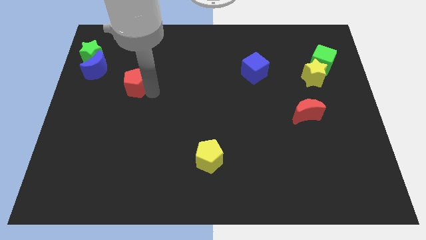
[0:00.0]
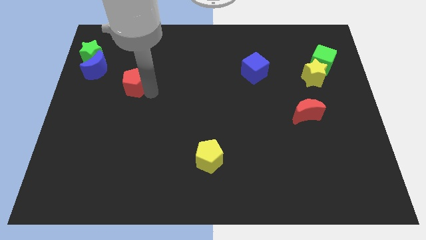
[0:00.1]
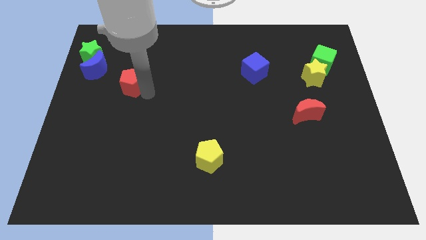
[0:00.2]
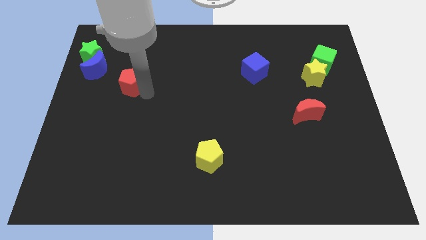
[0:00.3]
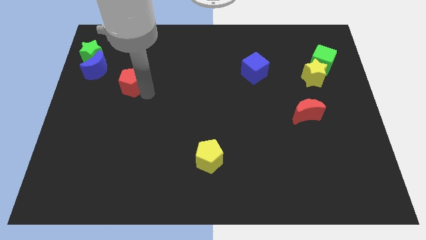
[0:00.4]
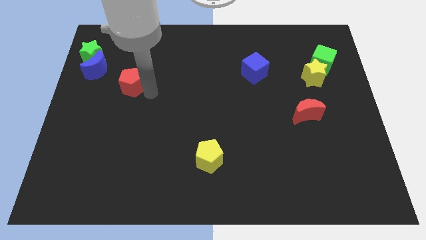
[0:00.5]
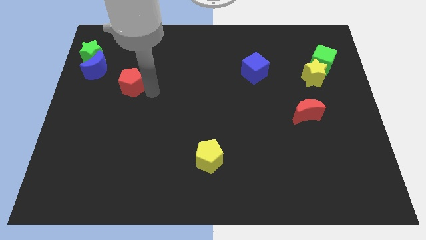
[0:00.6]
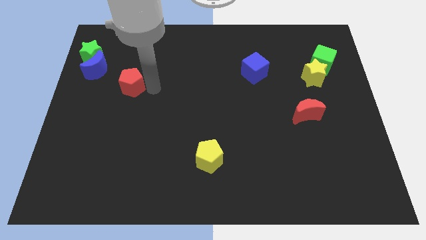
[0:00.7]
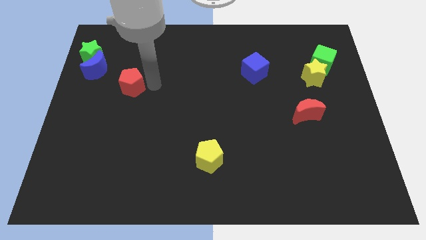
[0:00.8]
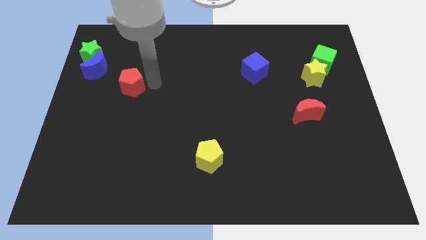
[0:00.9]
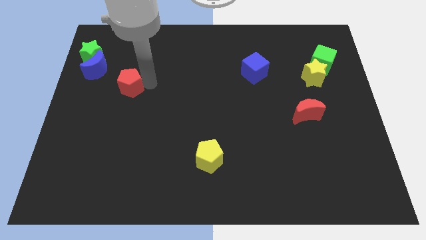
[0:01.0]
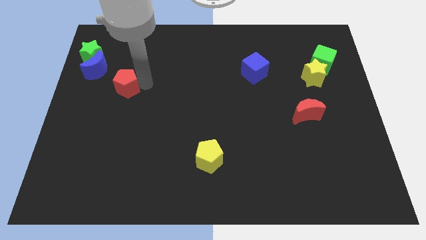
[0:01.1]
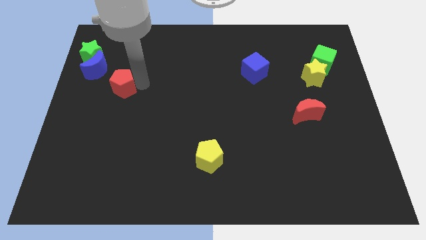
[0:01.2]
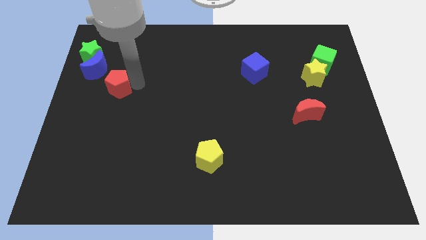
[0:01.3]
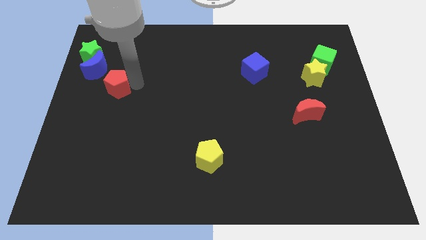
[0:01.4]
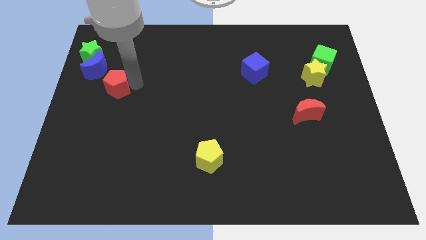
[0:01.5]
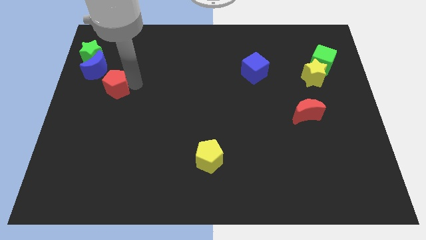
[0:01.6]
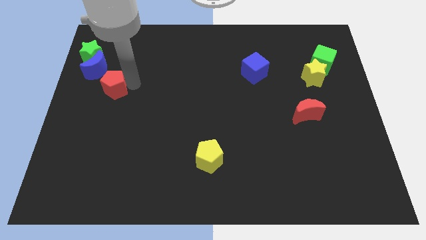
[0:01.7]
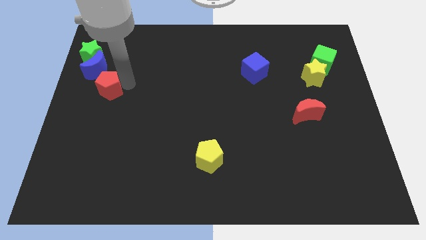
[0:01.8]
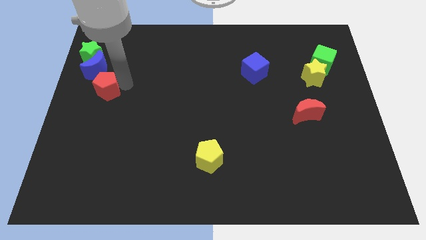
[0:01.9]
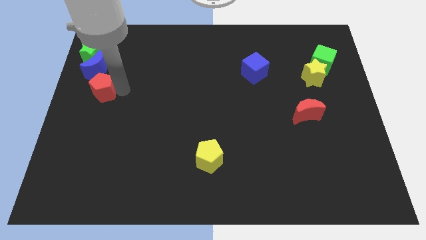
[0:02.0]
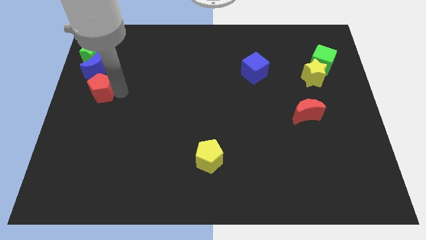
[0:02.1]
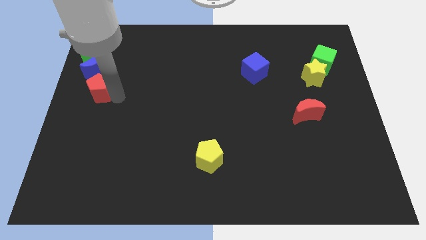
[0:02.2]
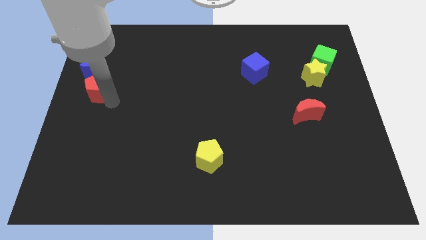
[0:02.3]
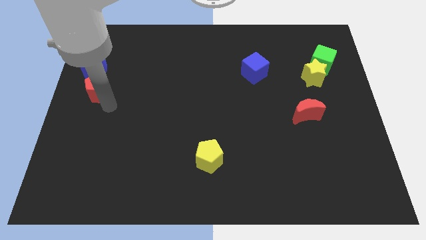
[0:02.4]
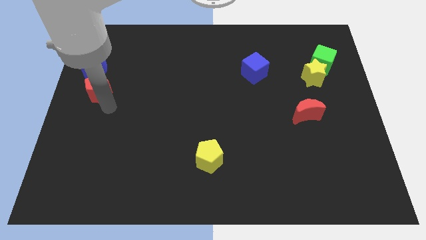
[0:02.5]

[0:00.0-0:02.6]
place the red pentagon below the blue crescent

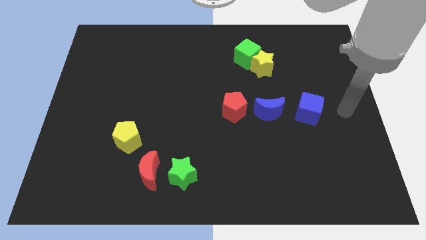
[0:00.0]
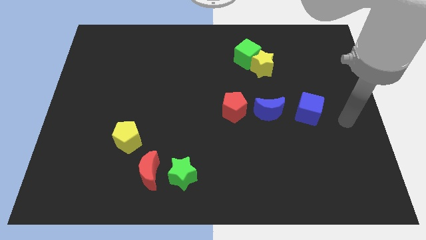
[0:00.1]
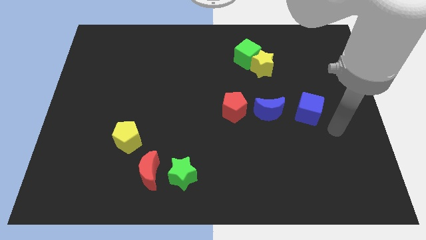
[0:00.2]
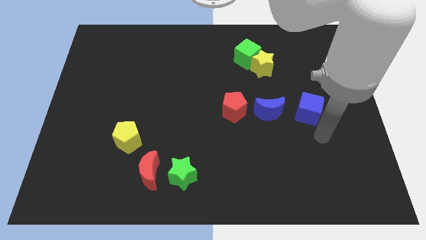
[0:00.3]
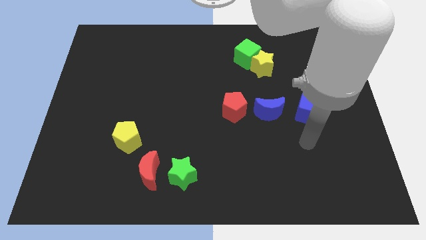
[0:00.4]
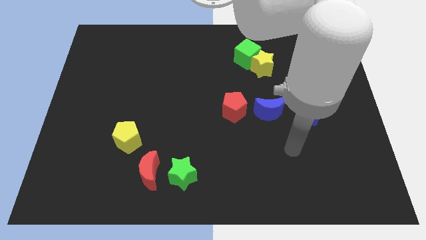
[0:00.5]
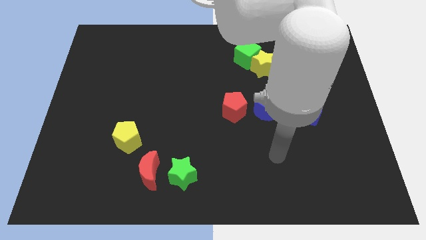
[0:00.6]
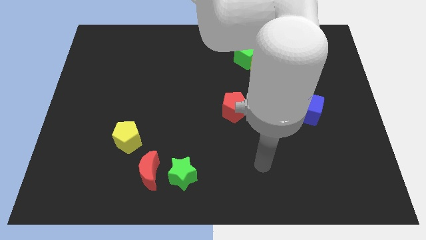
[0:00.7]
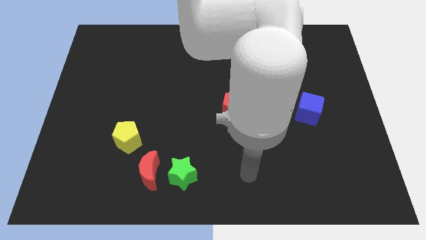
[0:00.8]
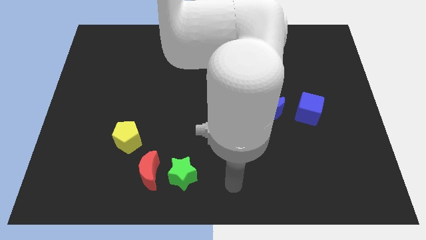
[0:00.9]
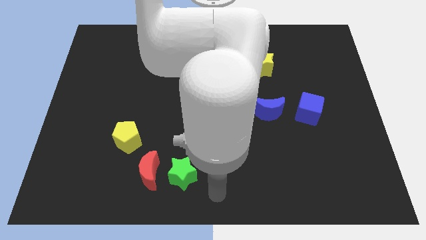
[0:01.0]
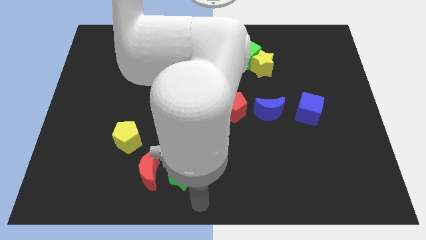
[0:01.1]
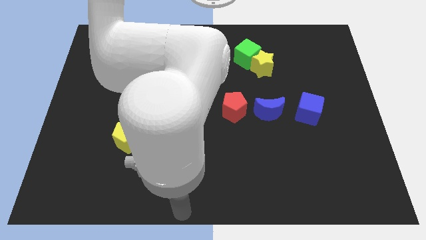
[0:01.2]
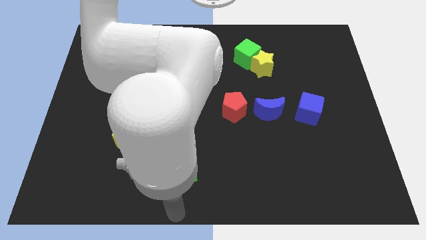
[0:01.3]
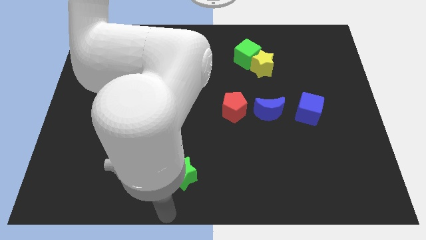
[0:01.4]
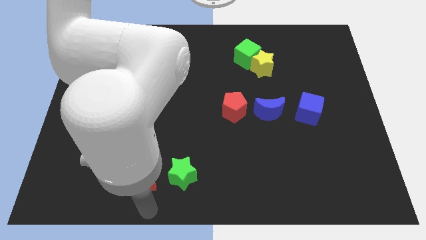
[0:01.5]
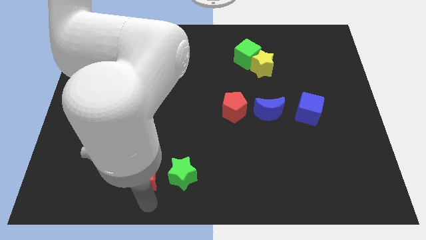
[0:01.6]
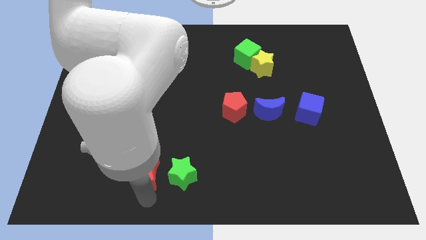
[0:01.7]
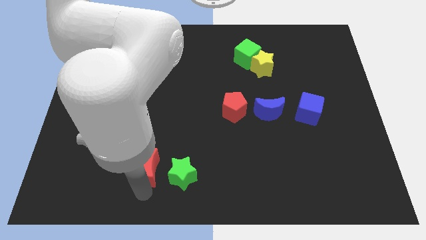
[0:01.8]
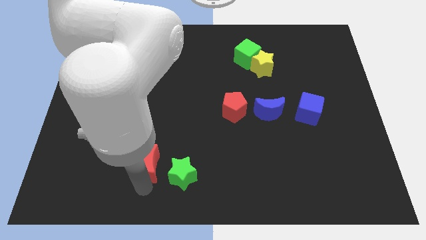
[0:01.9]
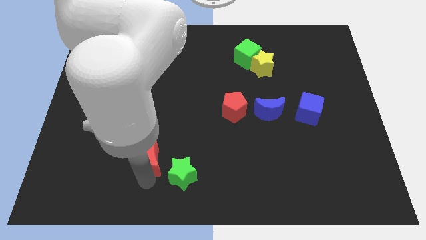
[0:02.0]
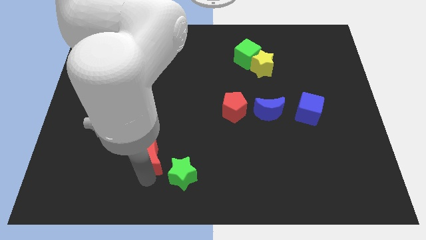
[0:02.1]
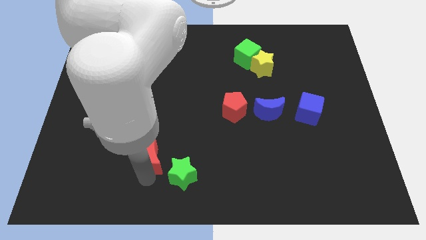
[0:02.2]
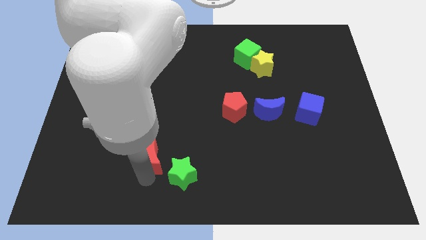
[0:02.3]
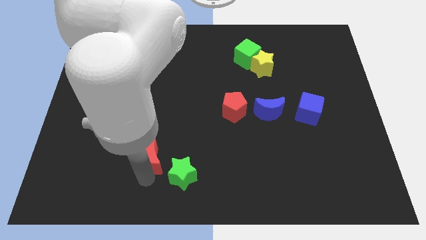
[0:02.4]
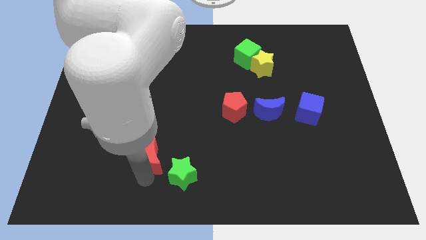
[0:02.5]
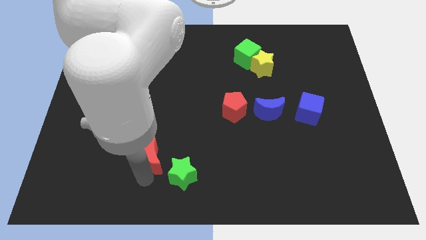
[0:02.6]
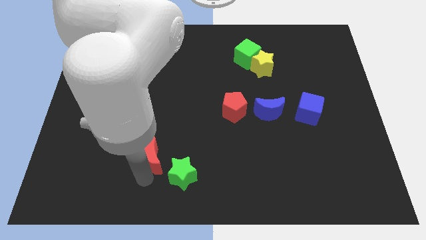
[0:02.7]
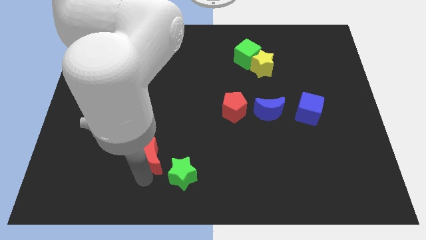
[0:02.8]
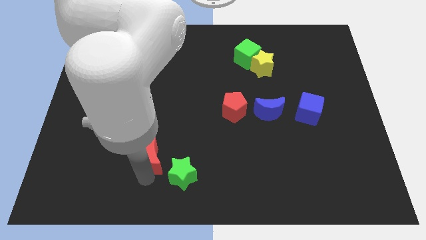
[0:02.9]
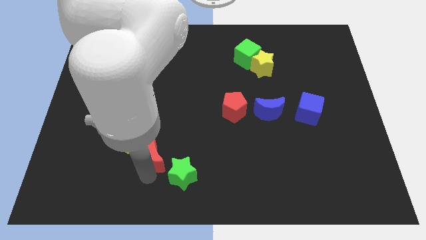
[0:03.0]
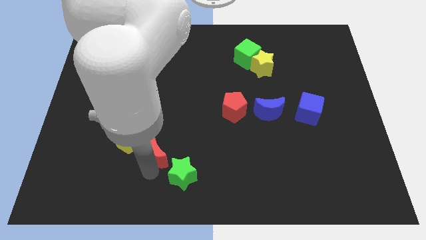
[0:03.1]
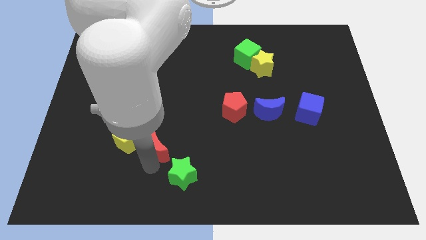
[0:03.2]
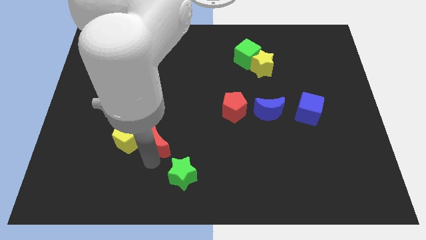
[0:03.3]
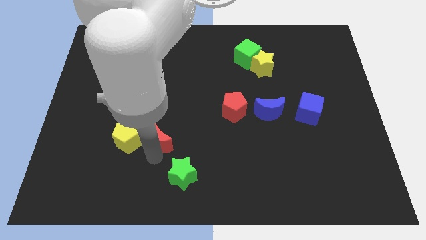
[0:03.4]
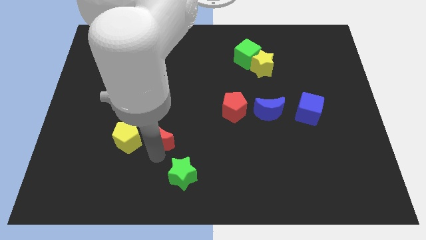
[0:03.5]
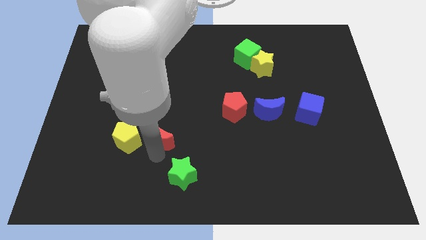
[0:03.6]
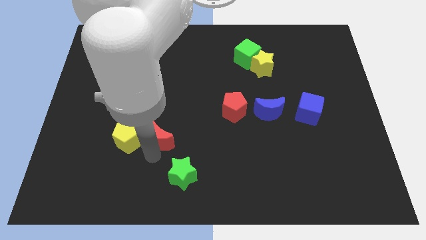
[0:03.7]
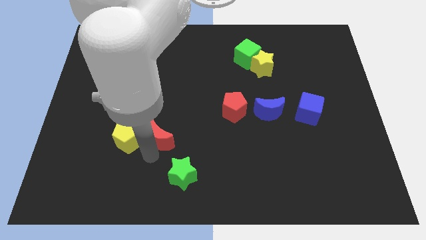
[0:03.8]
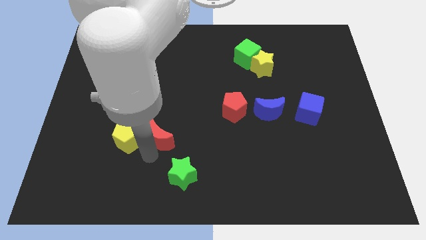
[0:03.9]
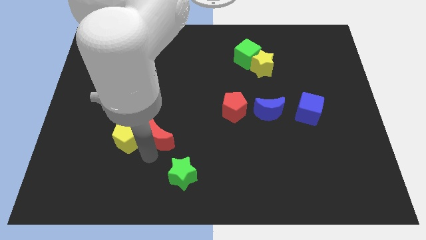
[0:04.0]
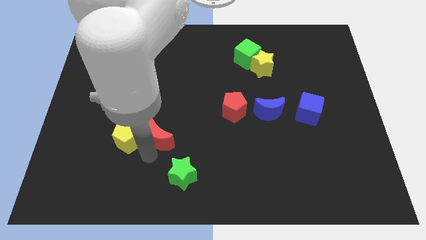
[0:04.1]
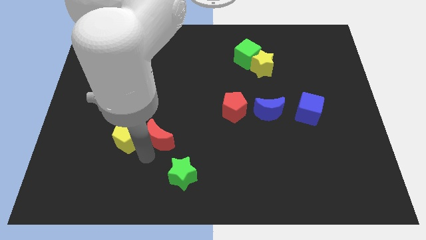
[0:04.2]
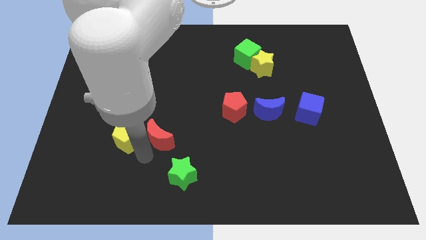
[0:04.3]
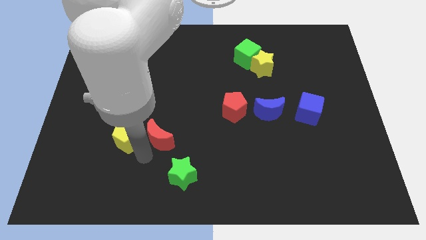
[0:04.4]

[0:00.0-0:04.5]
put the red moon at the right side of the yellow pentagon

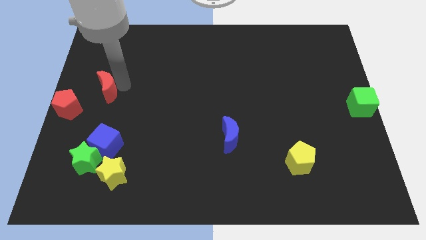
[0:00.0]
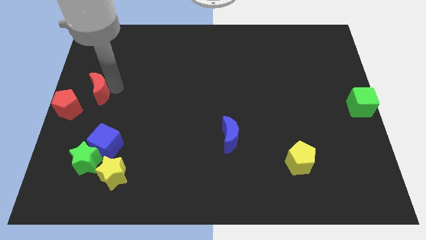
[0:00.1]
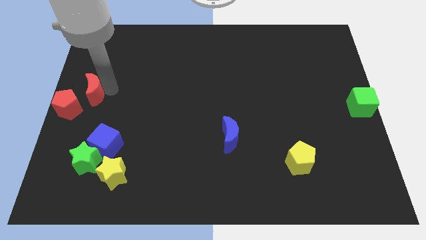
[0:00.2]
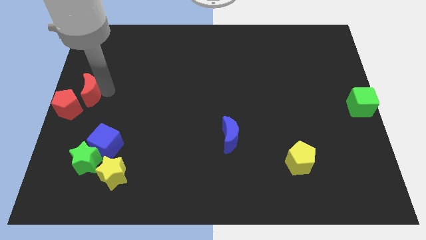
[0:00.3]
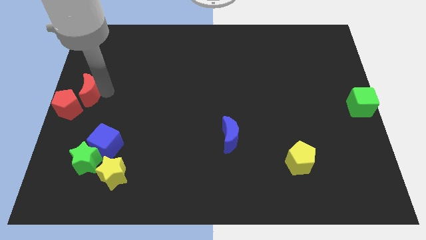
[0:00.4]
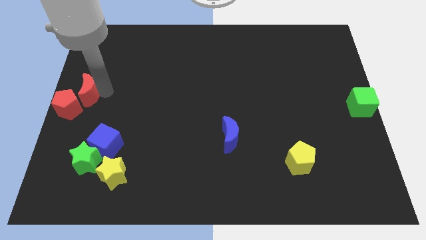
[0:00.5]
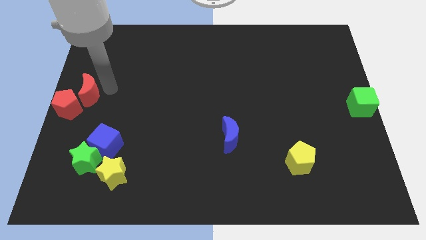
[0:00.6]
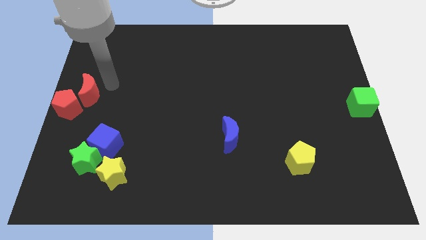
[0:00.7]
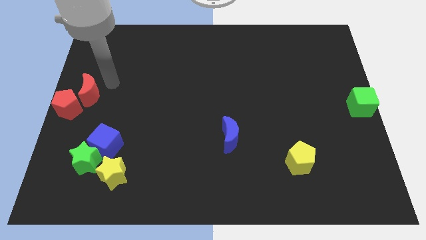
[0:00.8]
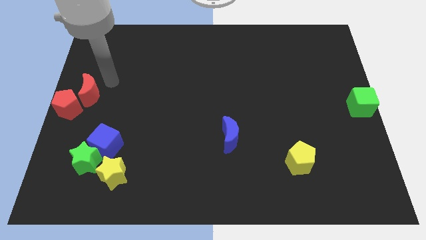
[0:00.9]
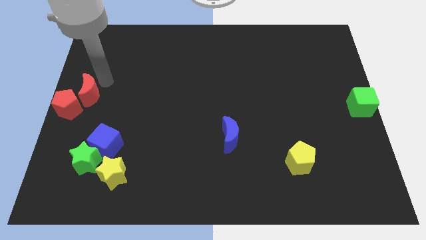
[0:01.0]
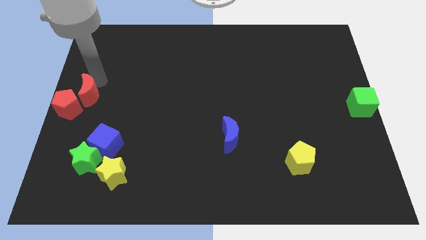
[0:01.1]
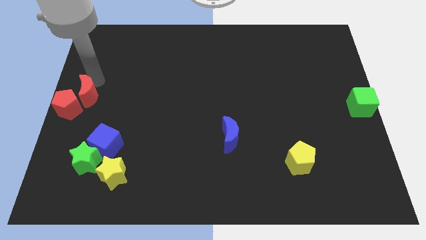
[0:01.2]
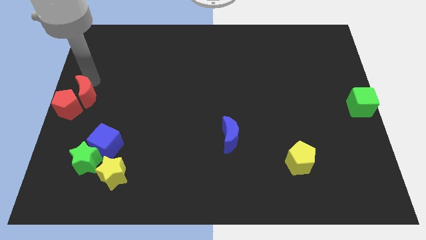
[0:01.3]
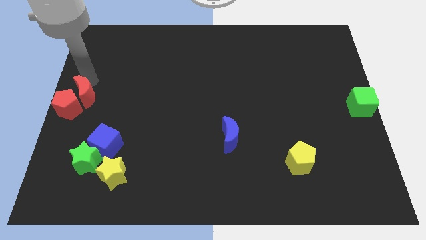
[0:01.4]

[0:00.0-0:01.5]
move the red crescent to the right of the red pentagon

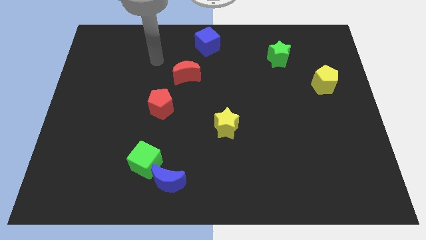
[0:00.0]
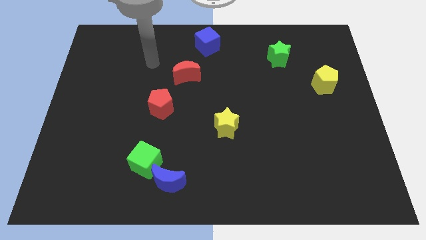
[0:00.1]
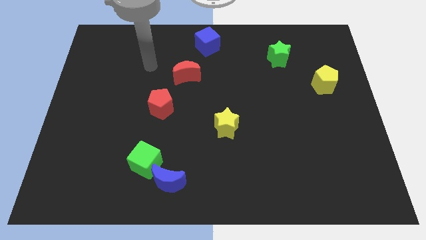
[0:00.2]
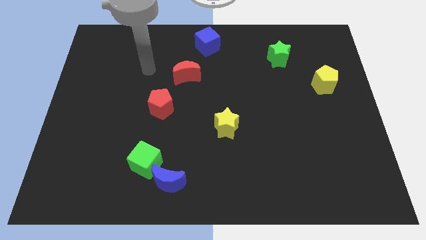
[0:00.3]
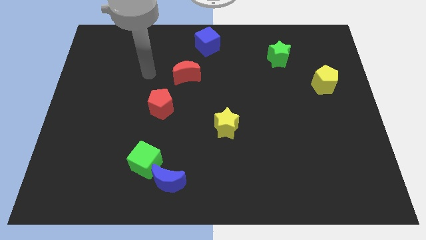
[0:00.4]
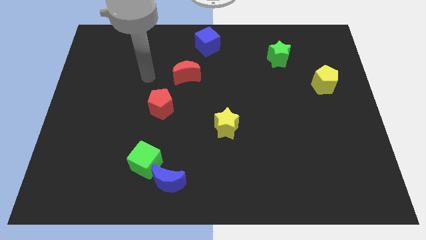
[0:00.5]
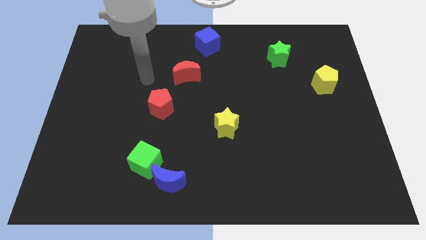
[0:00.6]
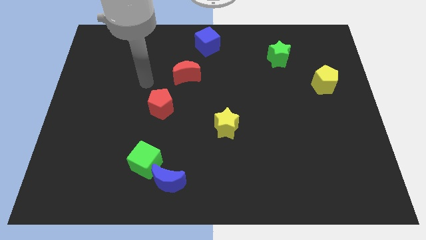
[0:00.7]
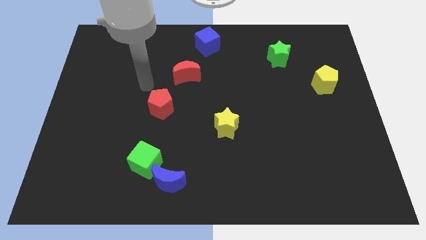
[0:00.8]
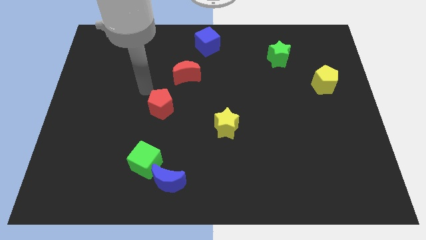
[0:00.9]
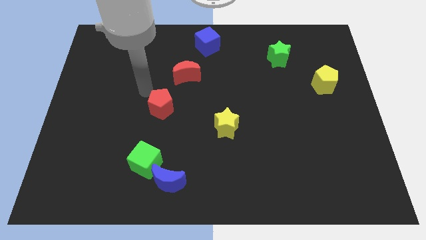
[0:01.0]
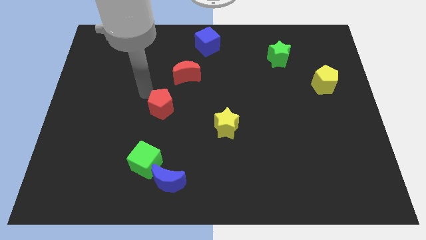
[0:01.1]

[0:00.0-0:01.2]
point your arm to the top left of the red pentagon
